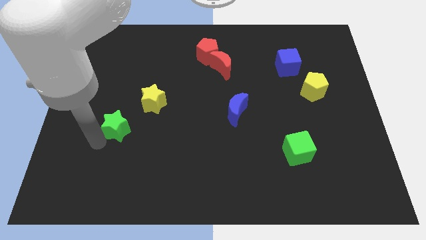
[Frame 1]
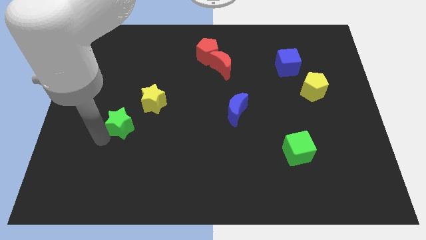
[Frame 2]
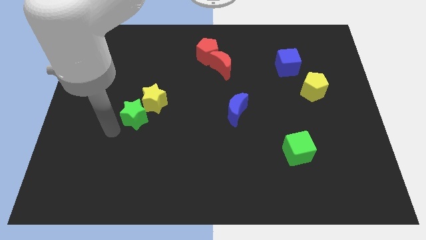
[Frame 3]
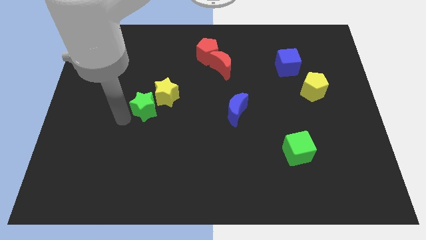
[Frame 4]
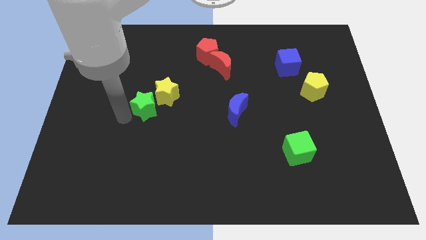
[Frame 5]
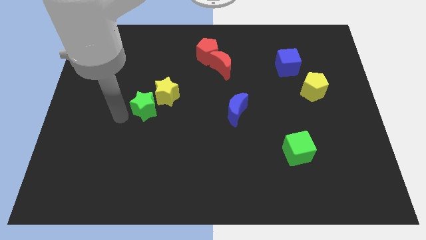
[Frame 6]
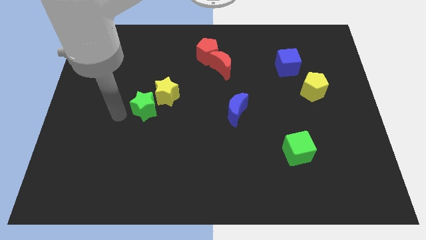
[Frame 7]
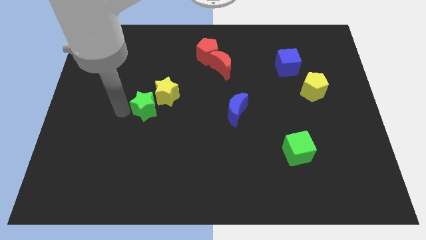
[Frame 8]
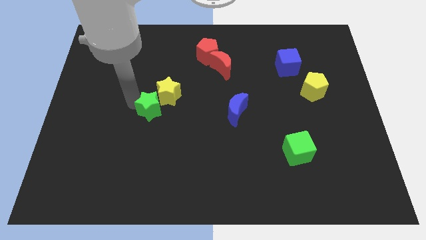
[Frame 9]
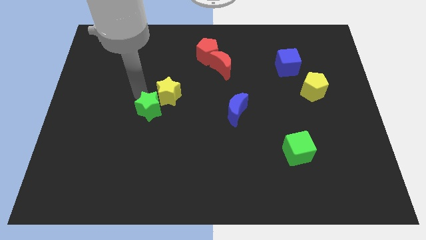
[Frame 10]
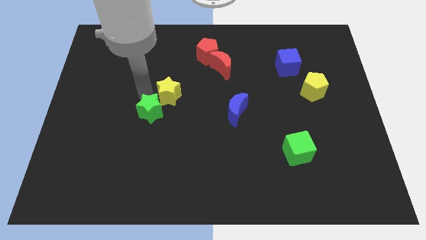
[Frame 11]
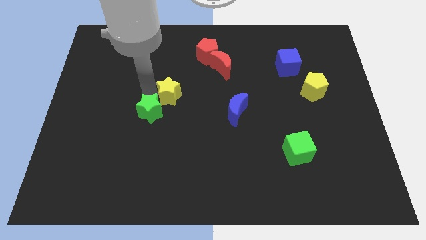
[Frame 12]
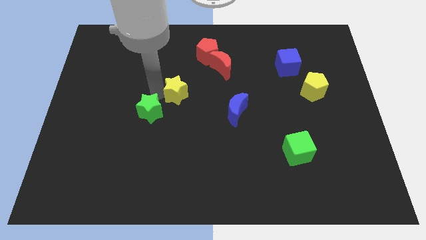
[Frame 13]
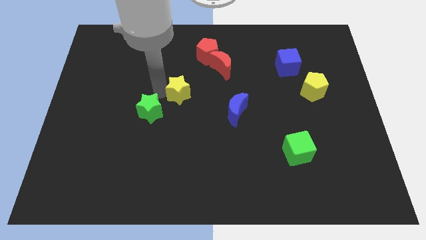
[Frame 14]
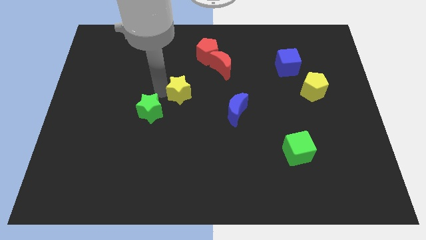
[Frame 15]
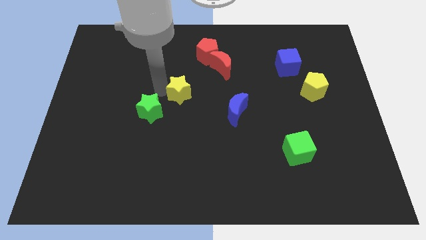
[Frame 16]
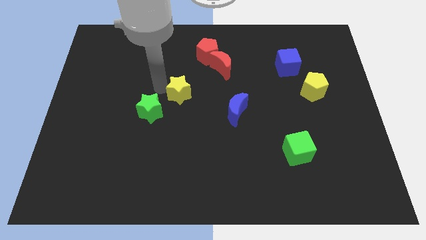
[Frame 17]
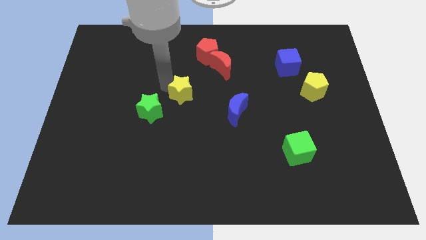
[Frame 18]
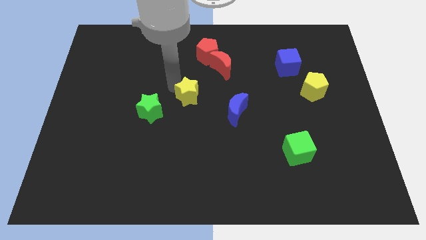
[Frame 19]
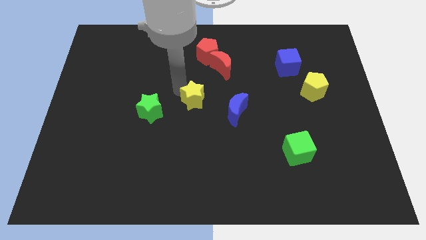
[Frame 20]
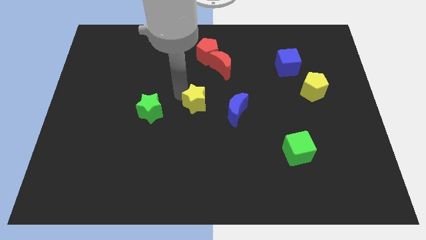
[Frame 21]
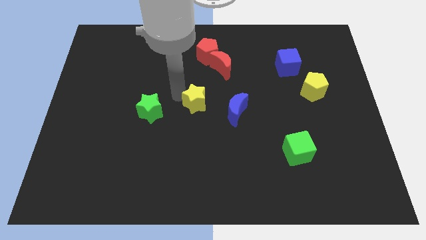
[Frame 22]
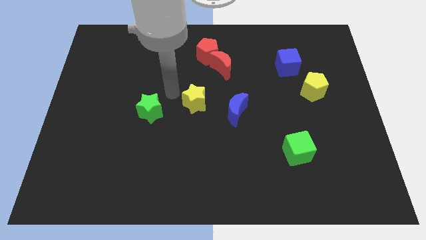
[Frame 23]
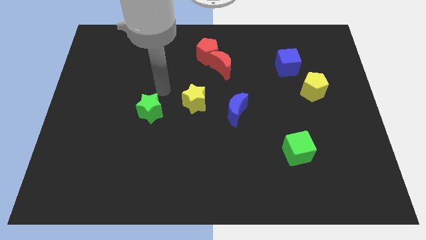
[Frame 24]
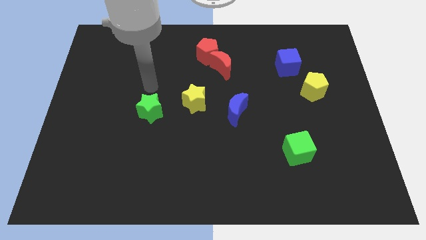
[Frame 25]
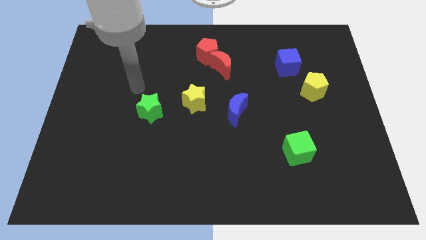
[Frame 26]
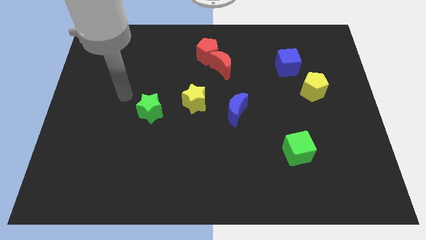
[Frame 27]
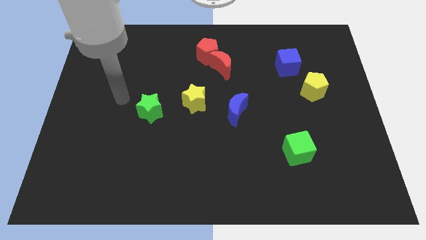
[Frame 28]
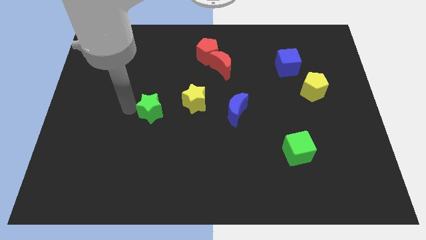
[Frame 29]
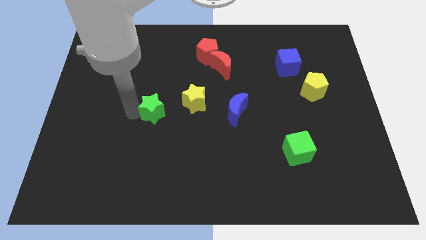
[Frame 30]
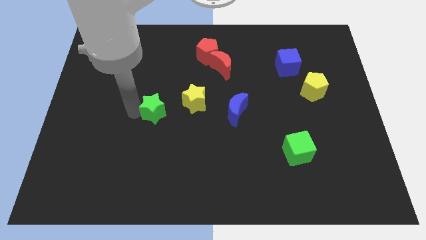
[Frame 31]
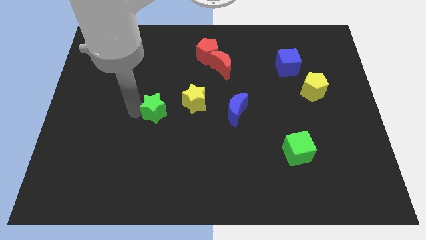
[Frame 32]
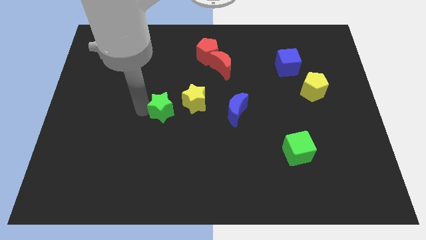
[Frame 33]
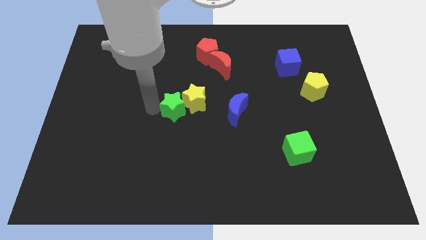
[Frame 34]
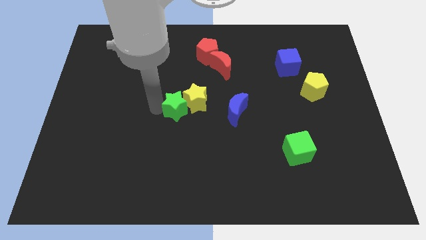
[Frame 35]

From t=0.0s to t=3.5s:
push yellow and green stars towards the center of the board

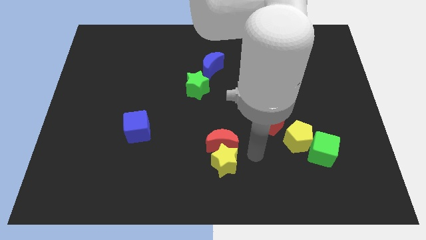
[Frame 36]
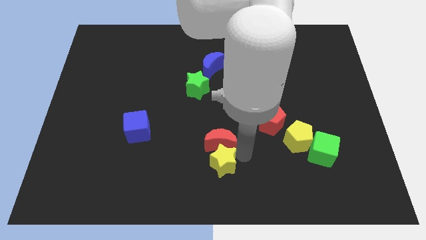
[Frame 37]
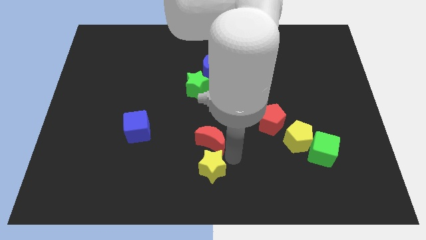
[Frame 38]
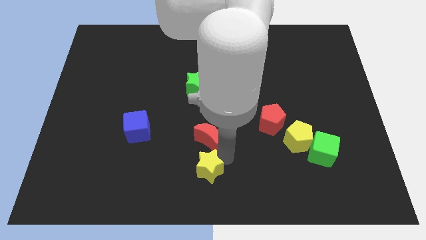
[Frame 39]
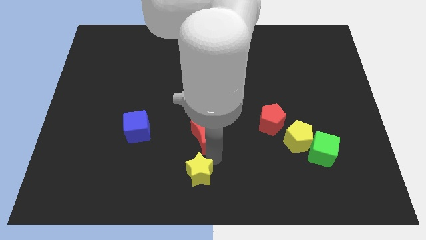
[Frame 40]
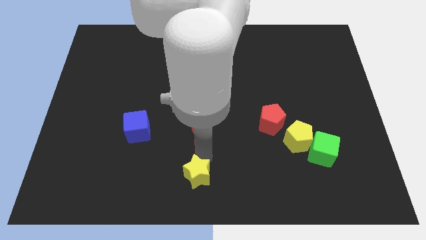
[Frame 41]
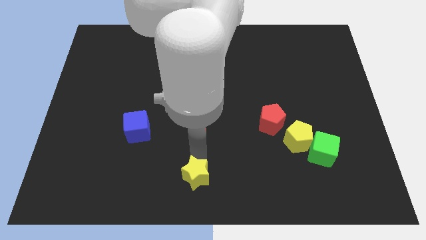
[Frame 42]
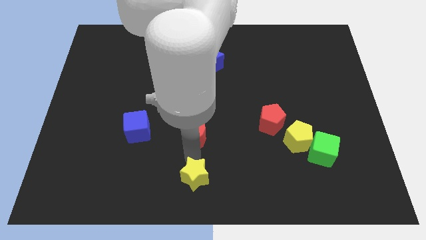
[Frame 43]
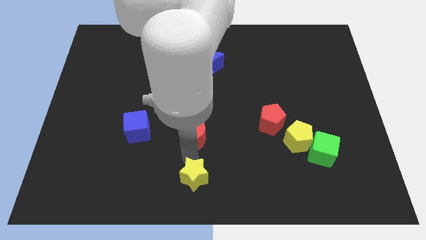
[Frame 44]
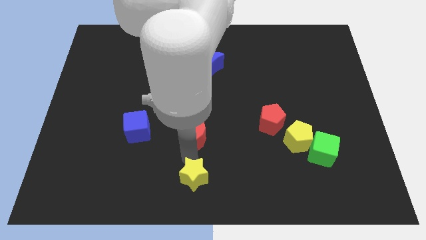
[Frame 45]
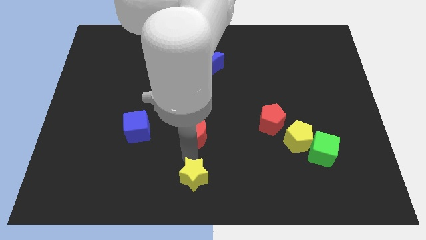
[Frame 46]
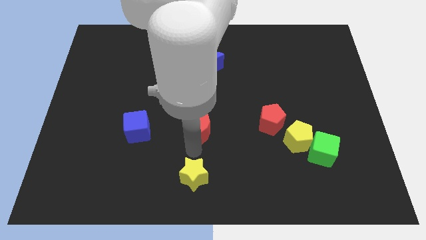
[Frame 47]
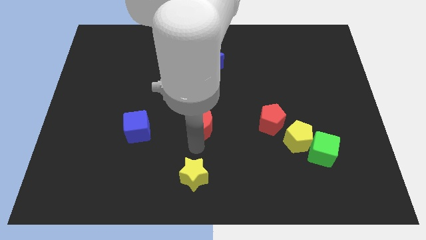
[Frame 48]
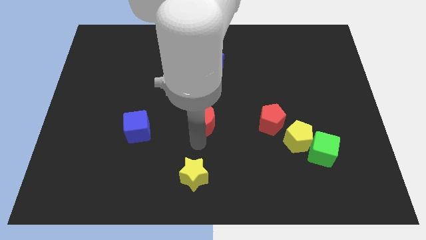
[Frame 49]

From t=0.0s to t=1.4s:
separate the red moon and yellow star

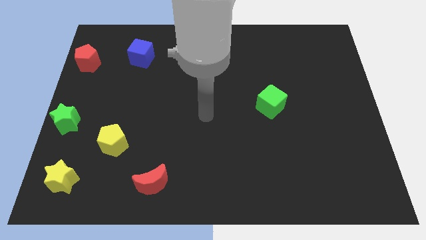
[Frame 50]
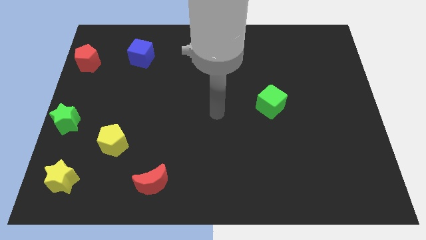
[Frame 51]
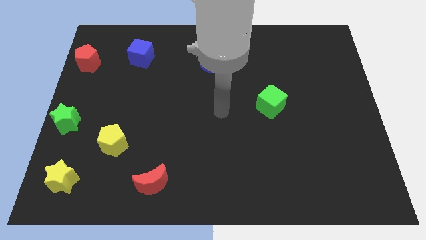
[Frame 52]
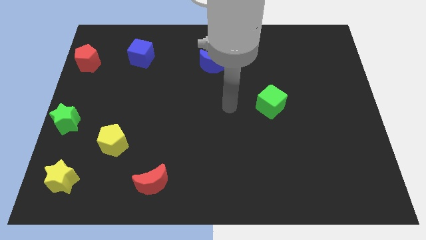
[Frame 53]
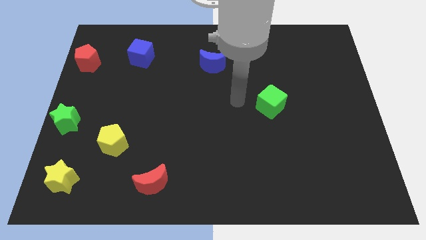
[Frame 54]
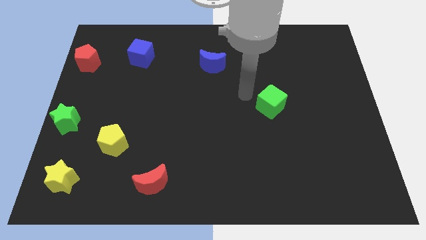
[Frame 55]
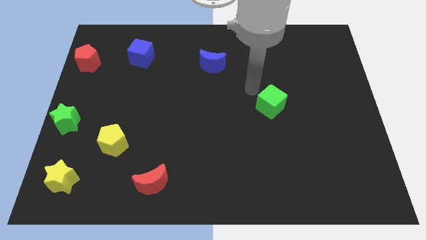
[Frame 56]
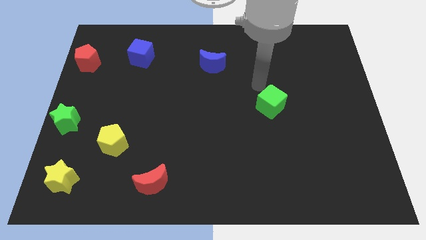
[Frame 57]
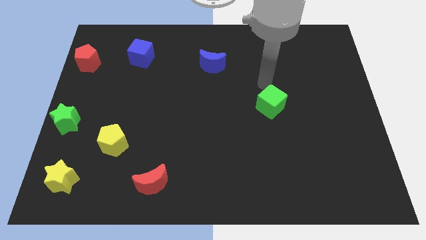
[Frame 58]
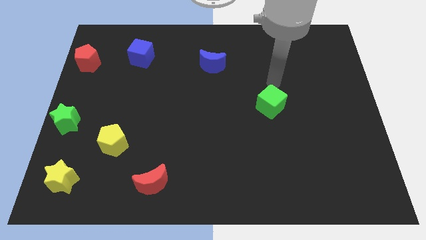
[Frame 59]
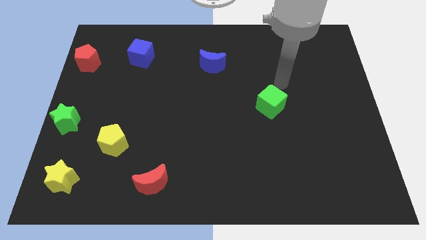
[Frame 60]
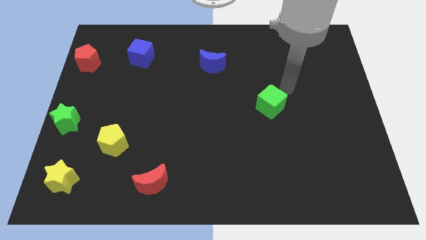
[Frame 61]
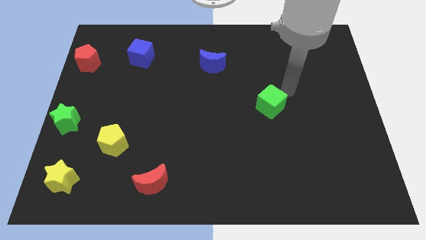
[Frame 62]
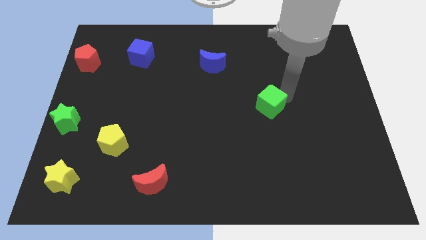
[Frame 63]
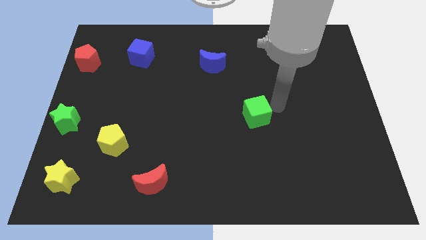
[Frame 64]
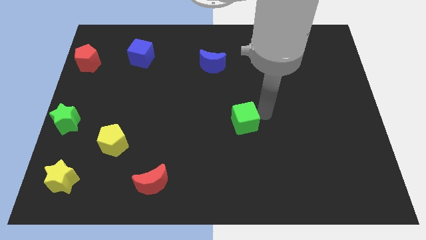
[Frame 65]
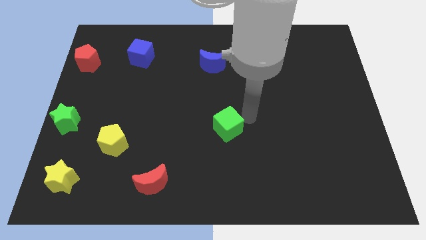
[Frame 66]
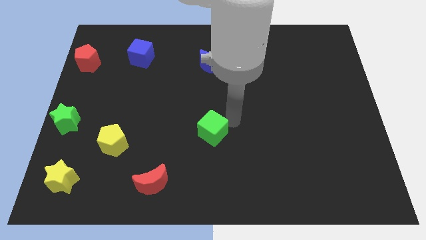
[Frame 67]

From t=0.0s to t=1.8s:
move the green cube to the center of the board

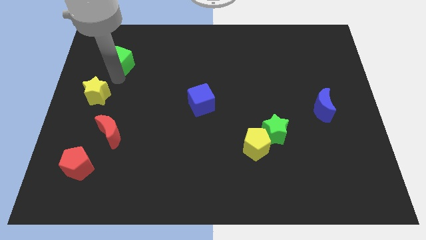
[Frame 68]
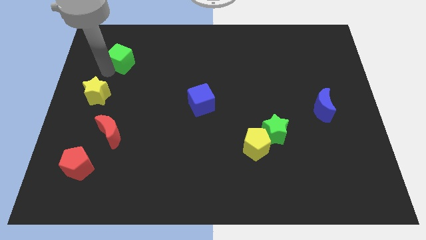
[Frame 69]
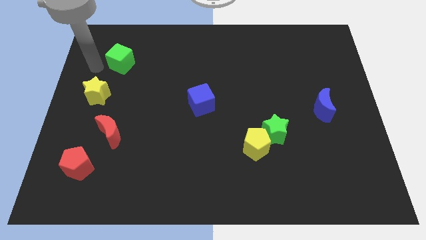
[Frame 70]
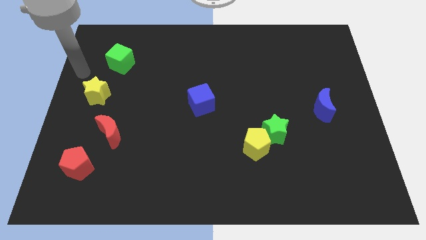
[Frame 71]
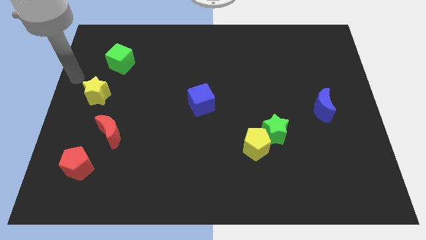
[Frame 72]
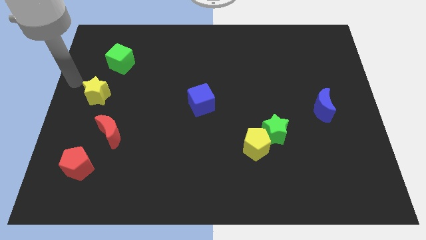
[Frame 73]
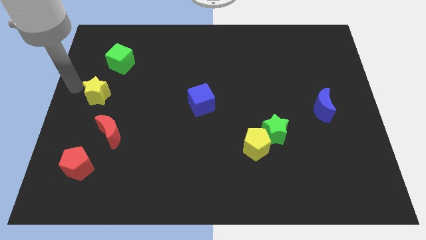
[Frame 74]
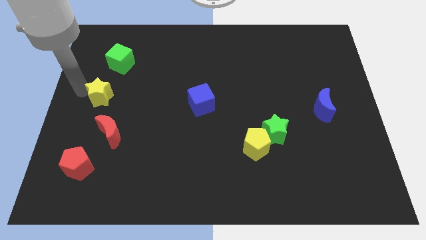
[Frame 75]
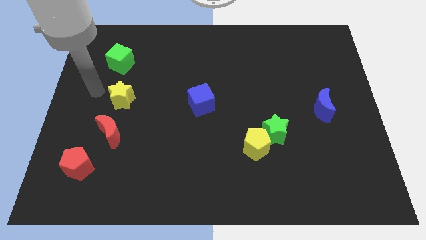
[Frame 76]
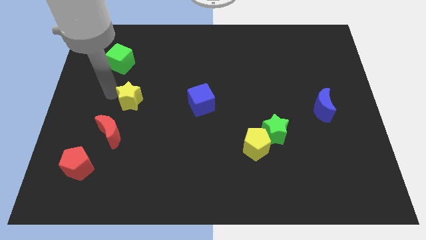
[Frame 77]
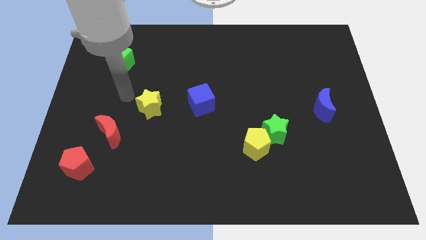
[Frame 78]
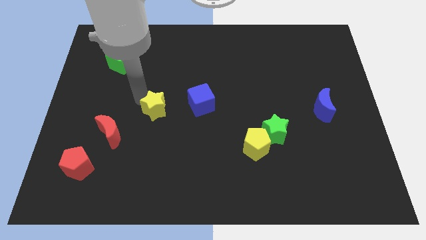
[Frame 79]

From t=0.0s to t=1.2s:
drag the yellow star to the right

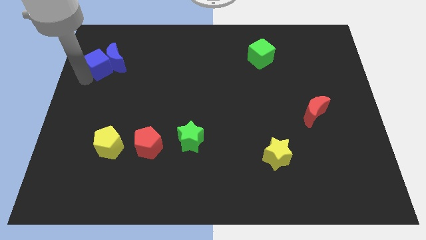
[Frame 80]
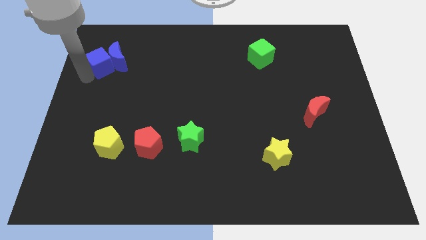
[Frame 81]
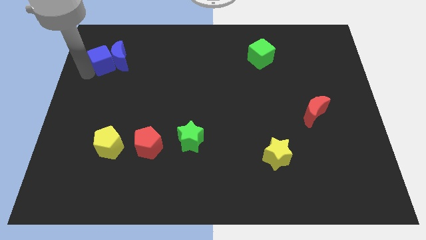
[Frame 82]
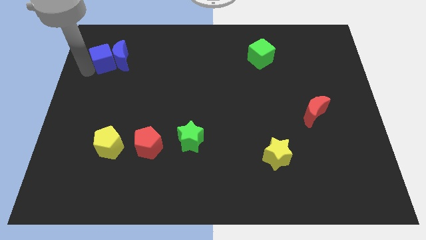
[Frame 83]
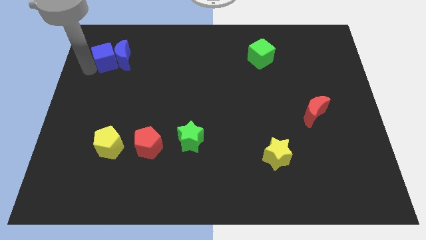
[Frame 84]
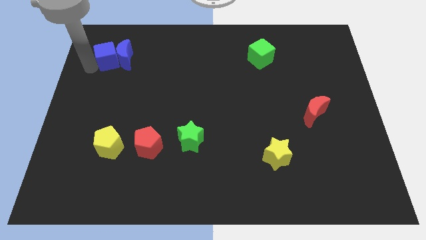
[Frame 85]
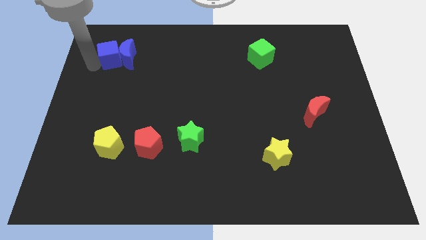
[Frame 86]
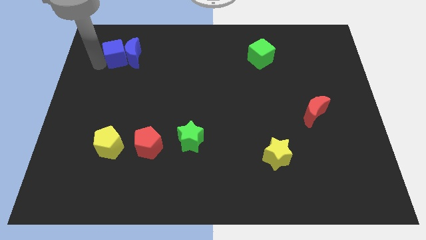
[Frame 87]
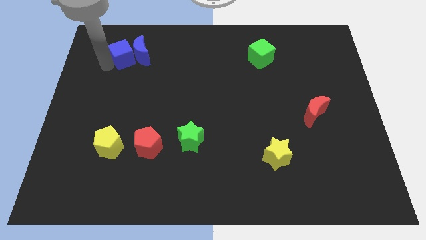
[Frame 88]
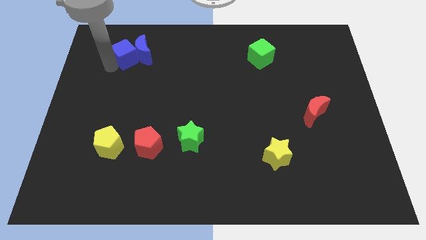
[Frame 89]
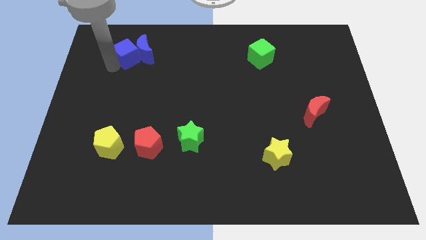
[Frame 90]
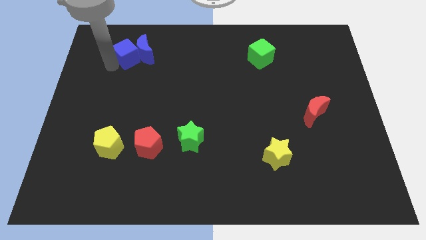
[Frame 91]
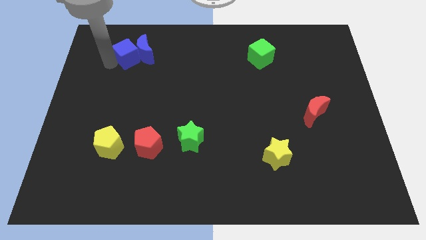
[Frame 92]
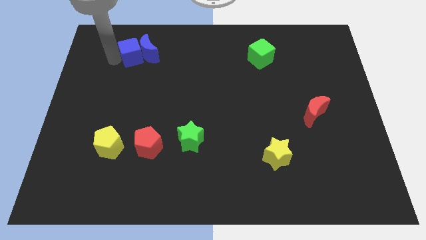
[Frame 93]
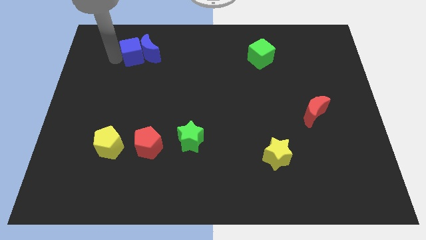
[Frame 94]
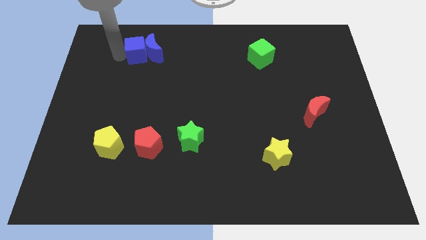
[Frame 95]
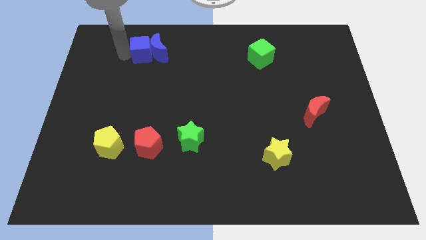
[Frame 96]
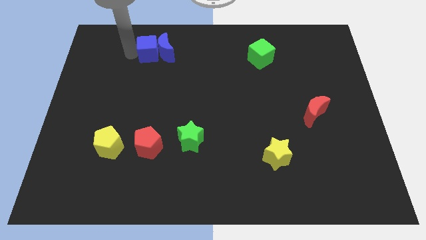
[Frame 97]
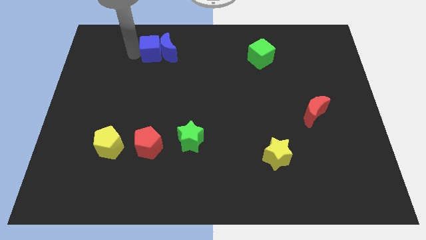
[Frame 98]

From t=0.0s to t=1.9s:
place the blue blocks vertically above the red pentagon
